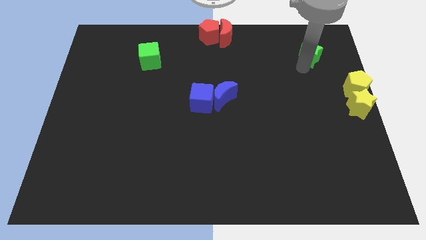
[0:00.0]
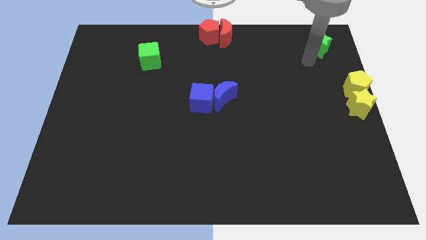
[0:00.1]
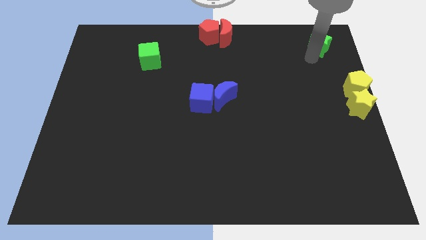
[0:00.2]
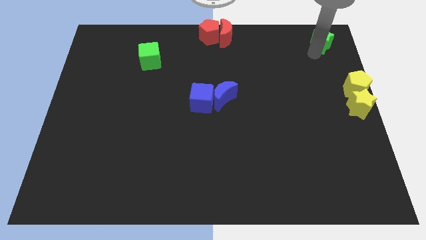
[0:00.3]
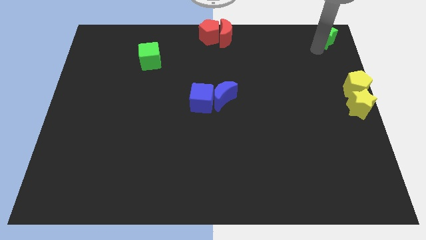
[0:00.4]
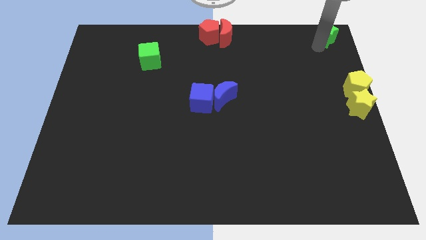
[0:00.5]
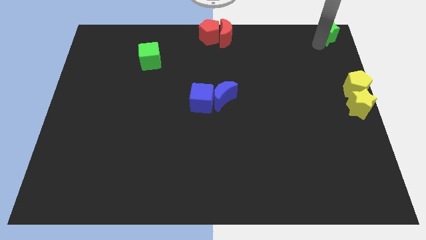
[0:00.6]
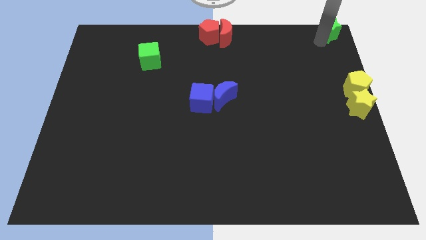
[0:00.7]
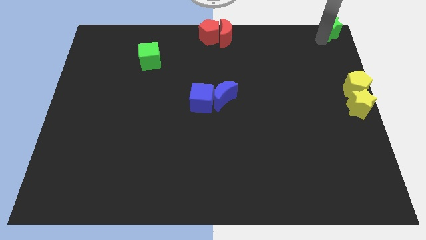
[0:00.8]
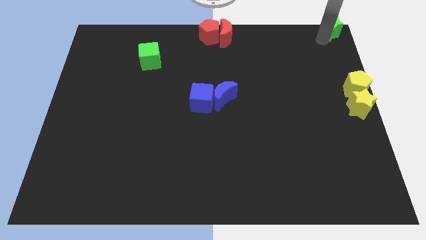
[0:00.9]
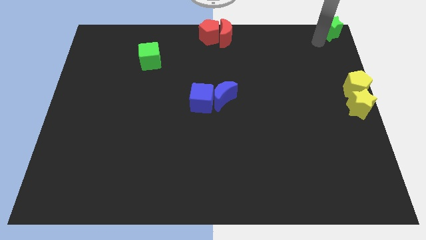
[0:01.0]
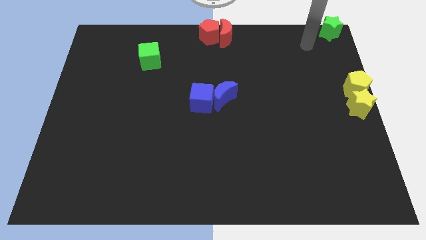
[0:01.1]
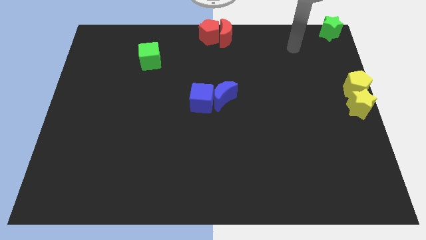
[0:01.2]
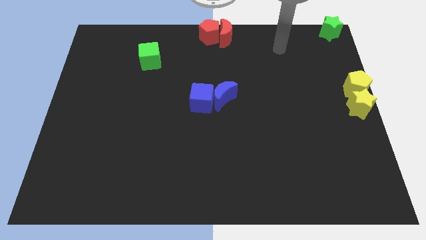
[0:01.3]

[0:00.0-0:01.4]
move the green star to the top right corner of the board

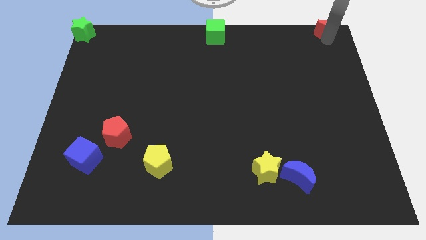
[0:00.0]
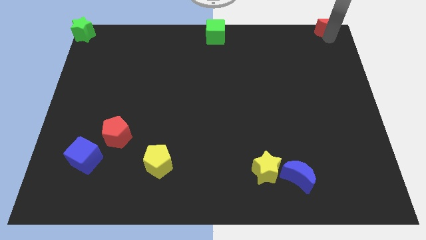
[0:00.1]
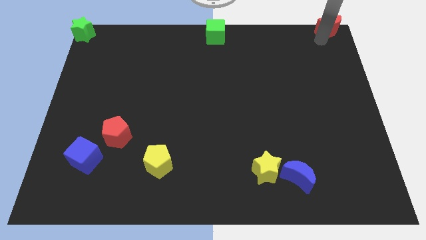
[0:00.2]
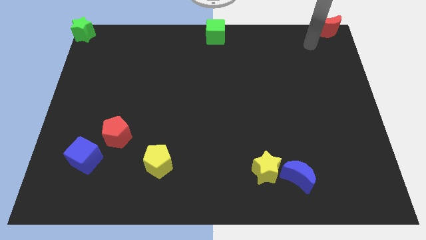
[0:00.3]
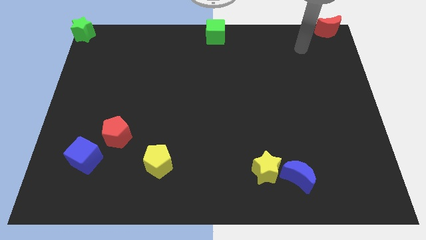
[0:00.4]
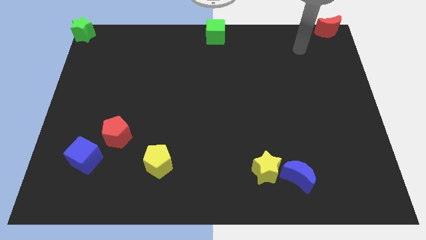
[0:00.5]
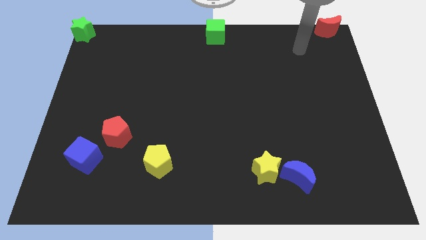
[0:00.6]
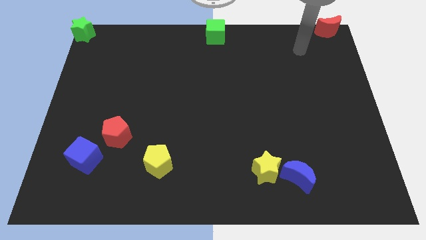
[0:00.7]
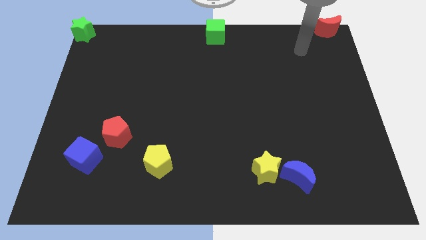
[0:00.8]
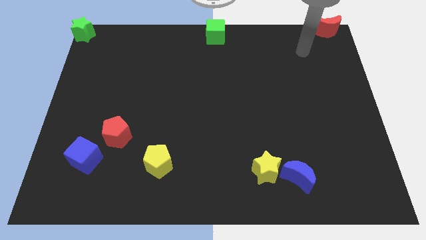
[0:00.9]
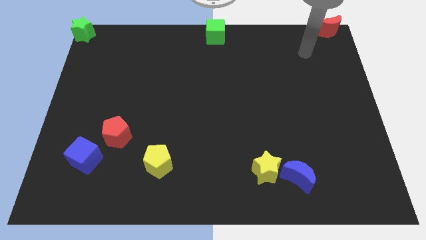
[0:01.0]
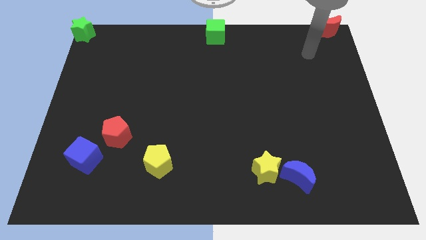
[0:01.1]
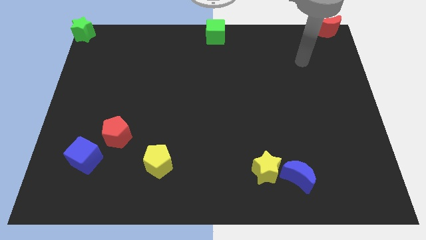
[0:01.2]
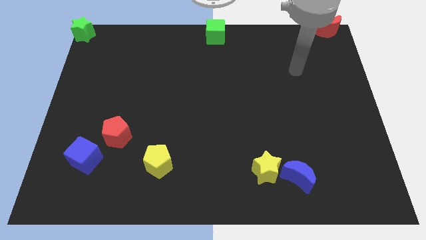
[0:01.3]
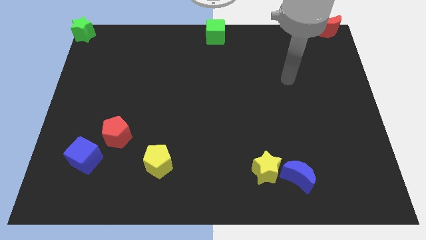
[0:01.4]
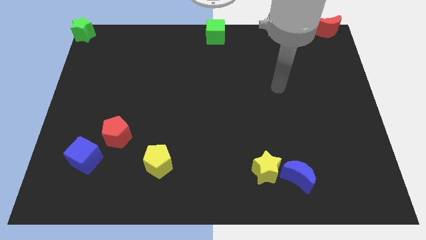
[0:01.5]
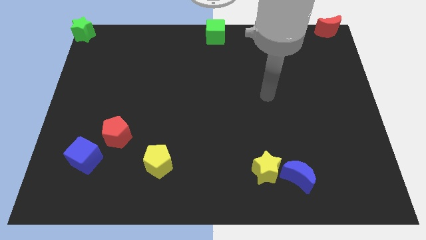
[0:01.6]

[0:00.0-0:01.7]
move your arm away from red moon

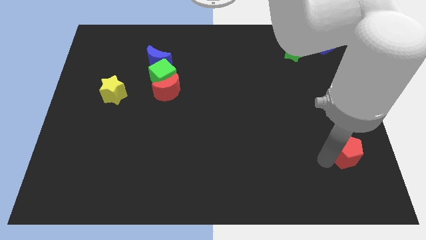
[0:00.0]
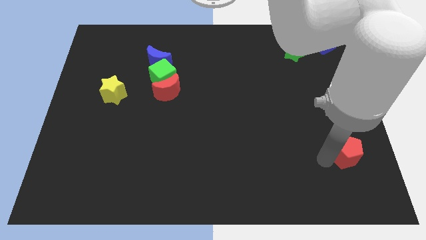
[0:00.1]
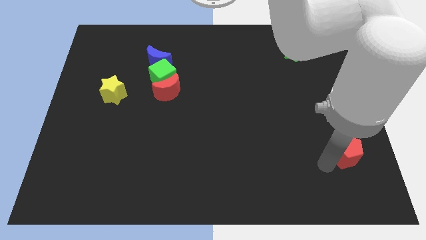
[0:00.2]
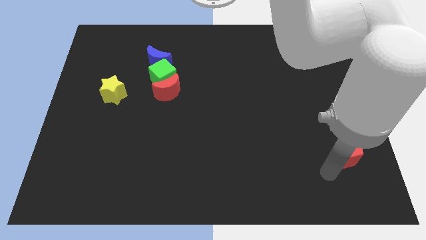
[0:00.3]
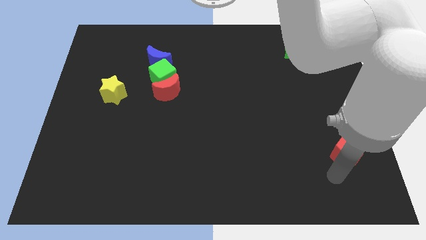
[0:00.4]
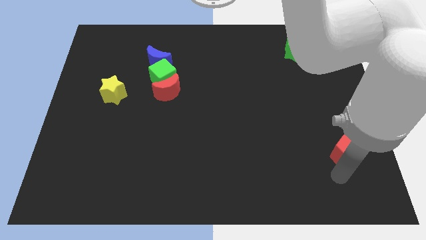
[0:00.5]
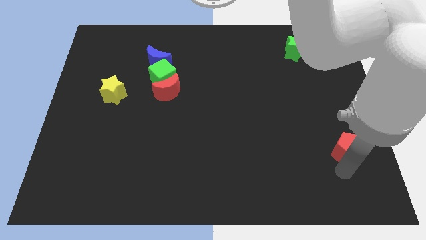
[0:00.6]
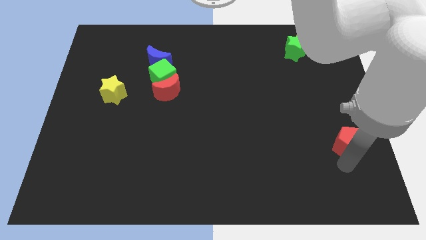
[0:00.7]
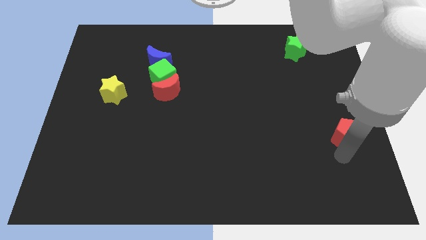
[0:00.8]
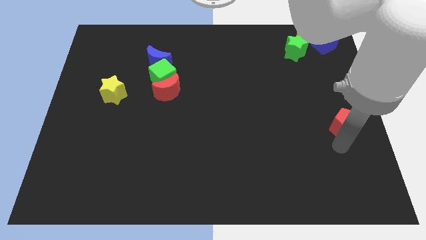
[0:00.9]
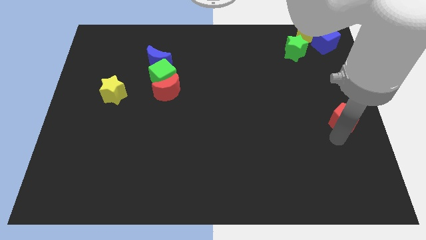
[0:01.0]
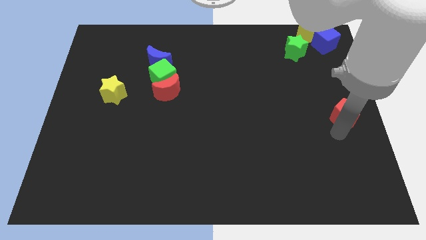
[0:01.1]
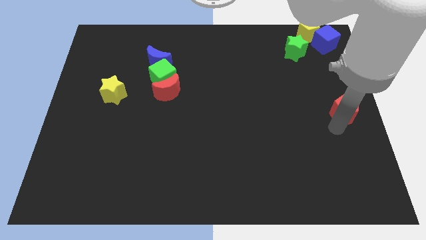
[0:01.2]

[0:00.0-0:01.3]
move the red pentagon at the center right of the board

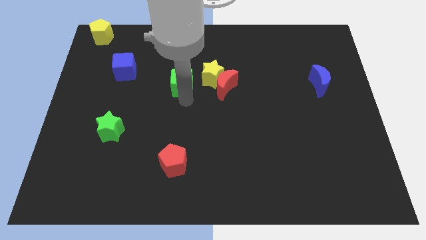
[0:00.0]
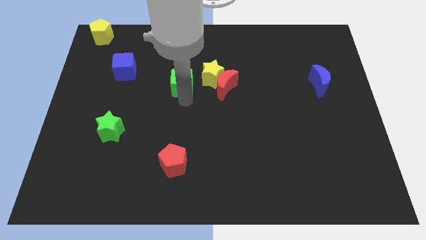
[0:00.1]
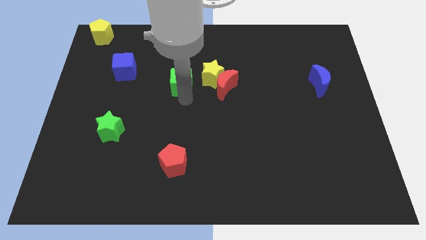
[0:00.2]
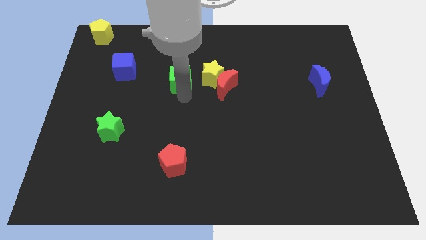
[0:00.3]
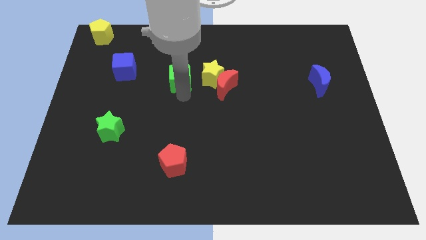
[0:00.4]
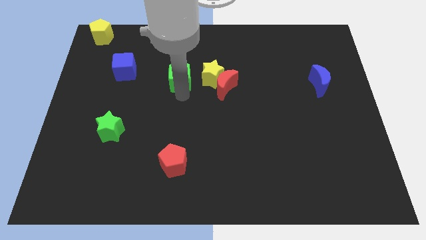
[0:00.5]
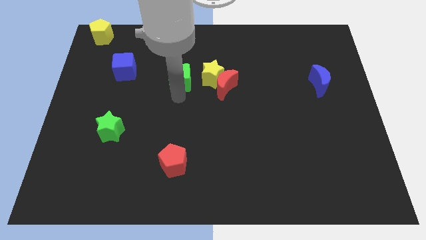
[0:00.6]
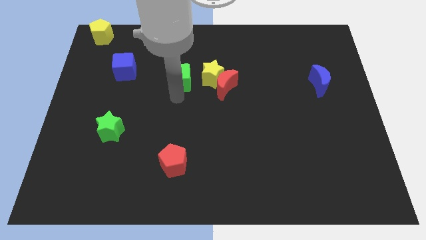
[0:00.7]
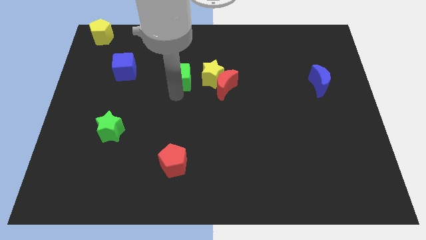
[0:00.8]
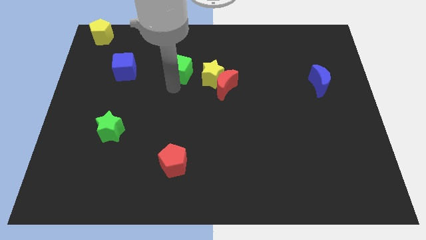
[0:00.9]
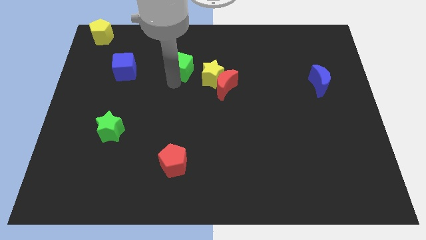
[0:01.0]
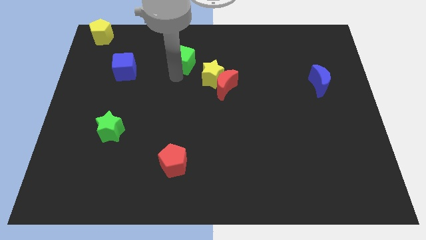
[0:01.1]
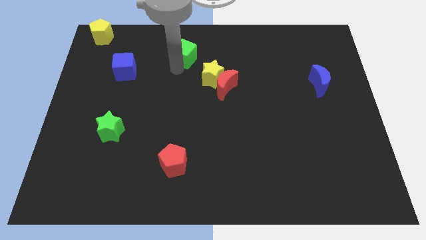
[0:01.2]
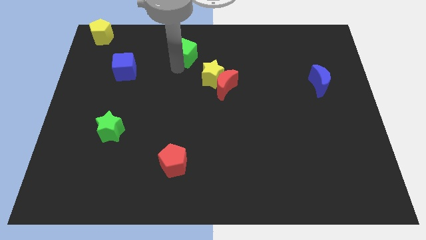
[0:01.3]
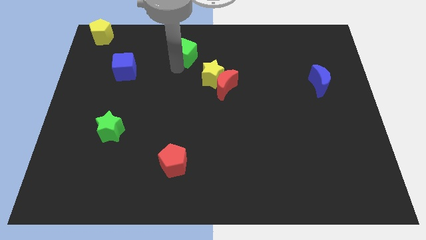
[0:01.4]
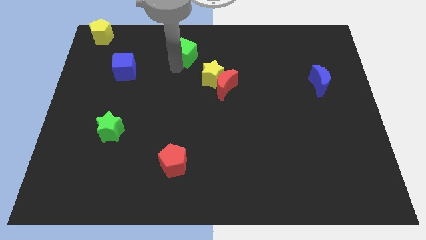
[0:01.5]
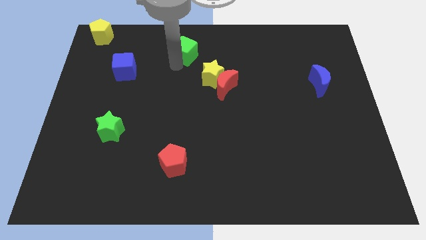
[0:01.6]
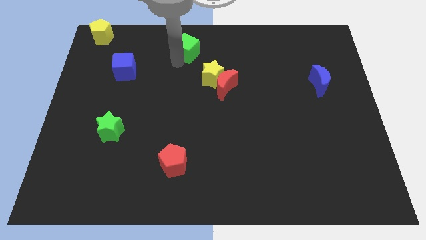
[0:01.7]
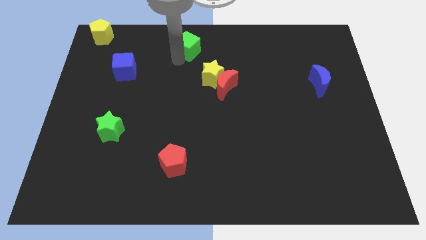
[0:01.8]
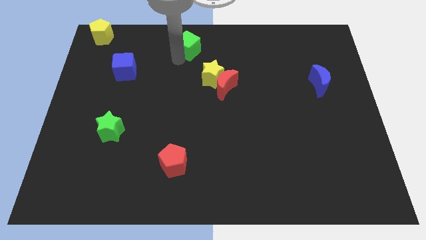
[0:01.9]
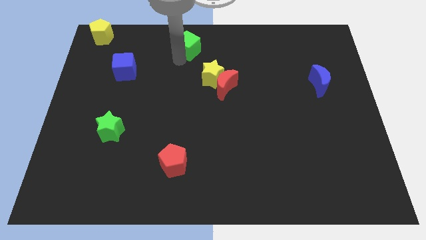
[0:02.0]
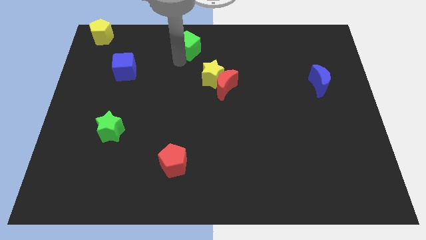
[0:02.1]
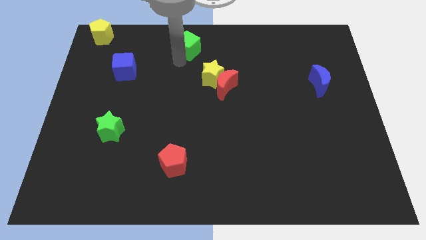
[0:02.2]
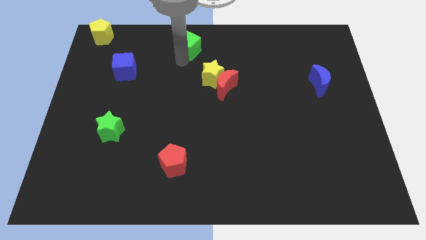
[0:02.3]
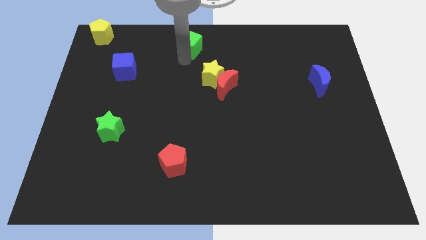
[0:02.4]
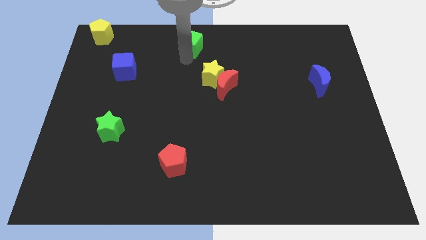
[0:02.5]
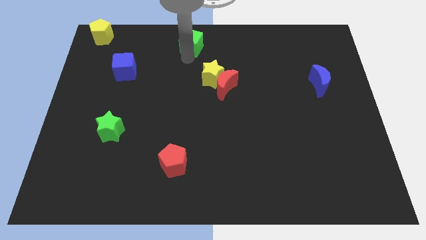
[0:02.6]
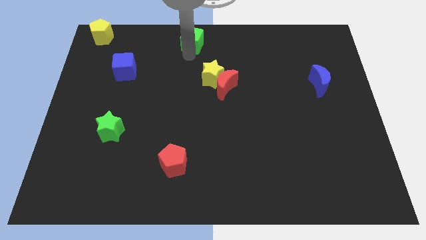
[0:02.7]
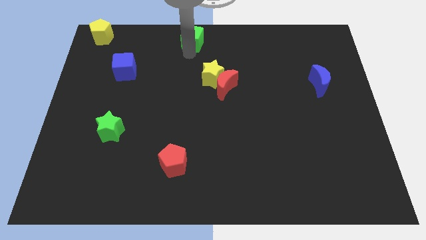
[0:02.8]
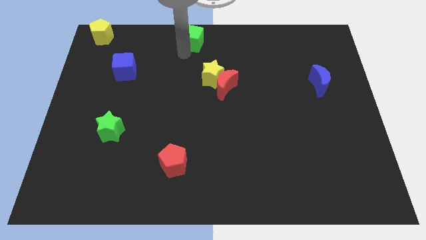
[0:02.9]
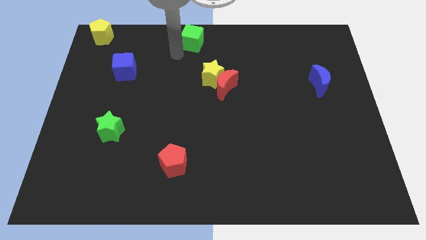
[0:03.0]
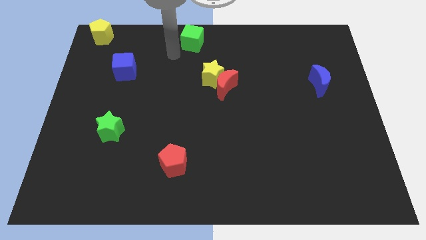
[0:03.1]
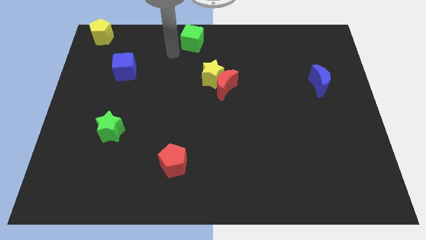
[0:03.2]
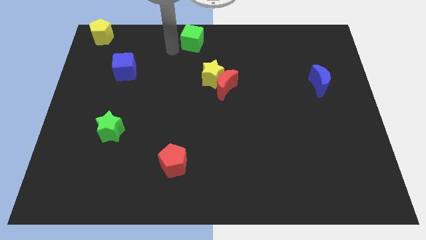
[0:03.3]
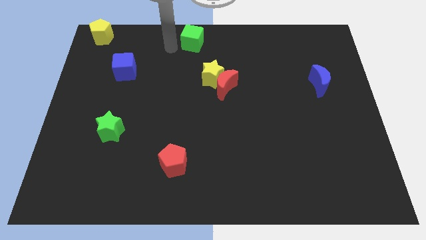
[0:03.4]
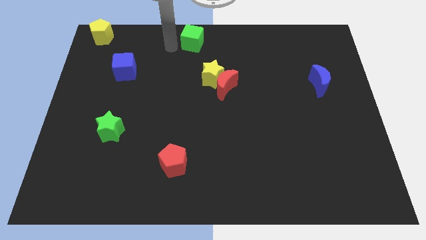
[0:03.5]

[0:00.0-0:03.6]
push the green cube towards the top center

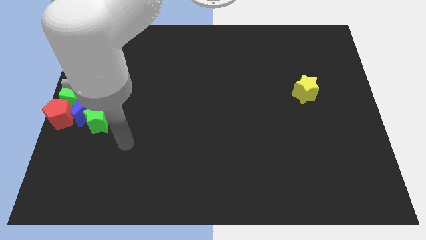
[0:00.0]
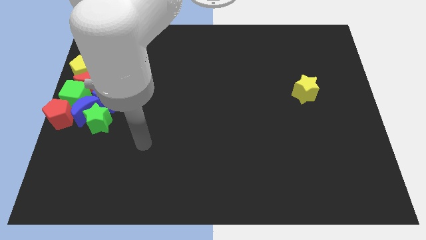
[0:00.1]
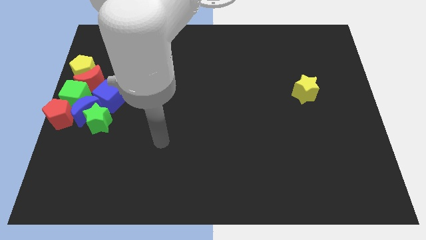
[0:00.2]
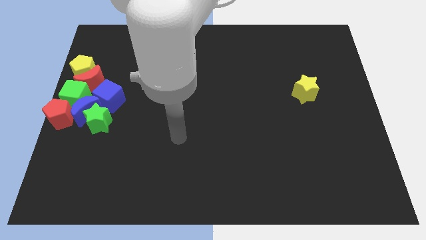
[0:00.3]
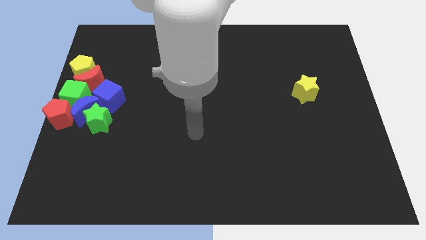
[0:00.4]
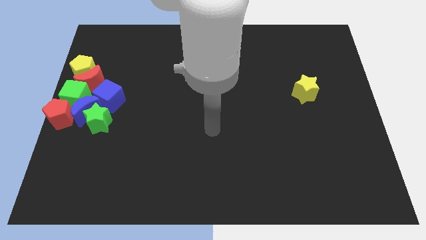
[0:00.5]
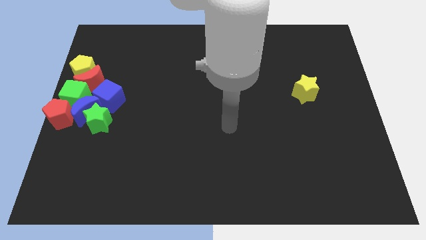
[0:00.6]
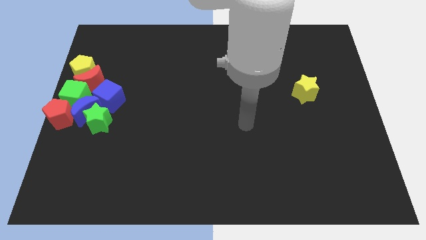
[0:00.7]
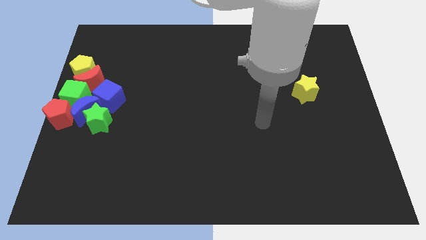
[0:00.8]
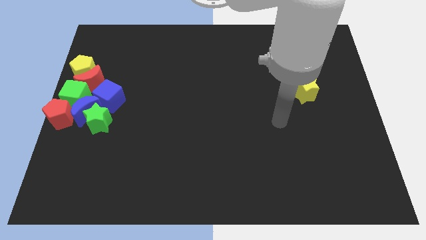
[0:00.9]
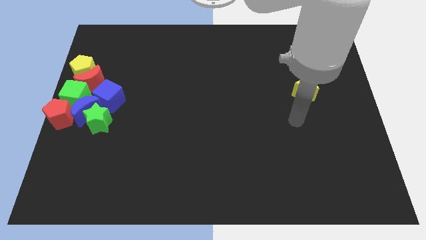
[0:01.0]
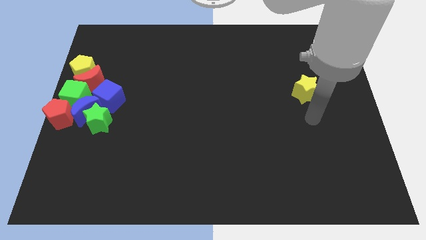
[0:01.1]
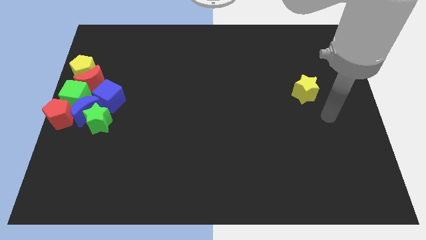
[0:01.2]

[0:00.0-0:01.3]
place your hand under the yellow star
